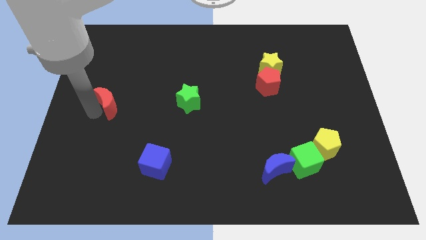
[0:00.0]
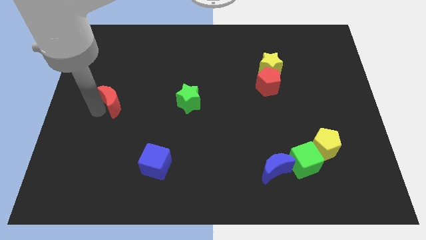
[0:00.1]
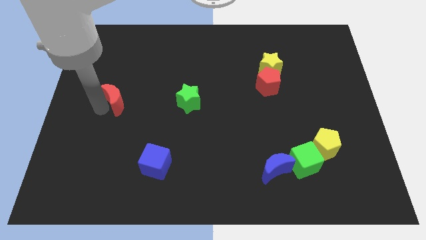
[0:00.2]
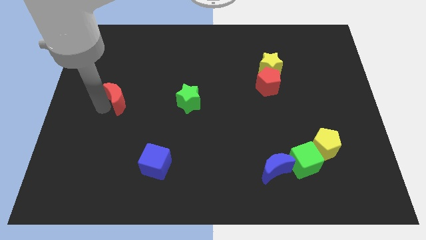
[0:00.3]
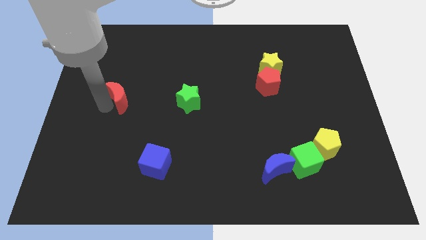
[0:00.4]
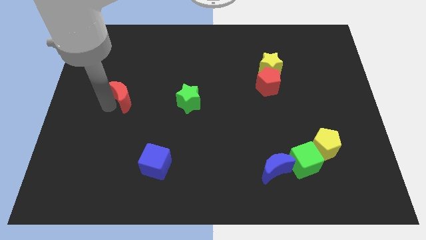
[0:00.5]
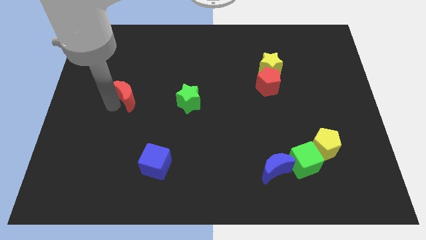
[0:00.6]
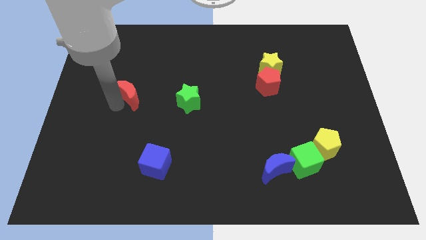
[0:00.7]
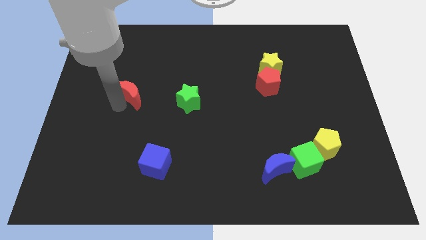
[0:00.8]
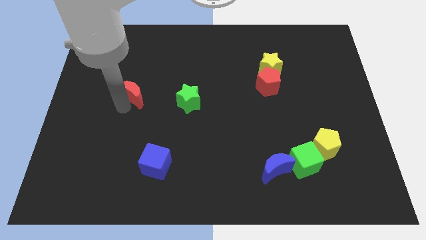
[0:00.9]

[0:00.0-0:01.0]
move the red crescent to the right of the board

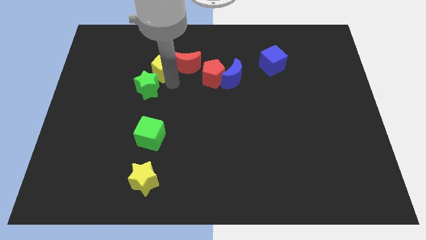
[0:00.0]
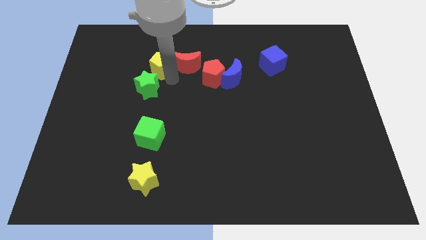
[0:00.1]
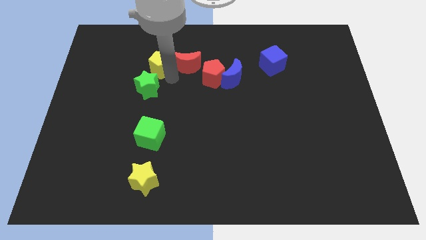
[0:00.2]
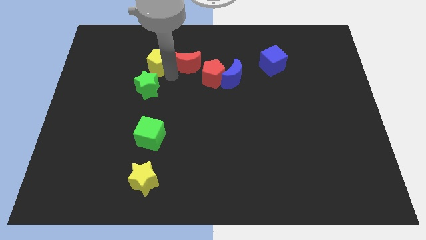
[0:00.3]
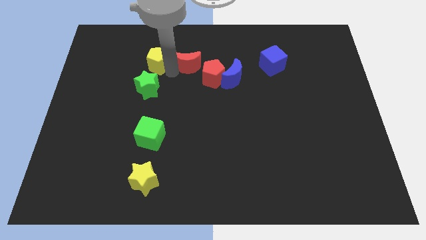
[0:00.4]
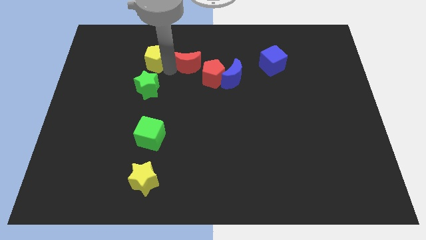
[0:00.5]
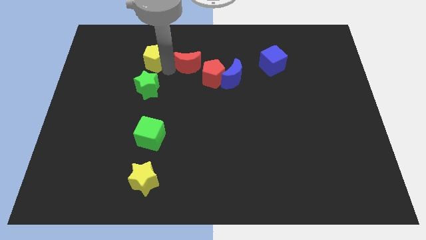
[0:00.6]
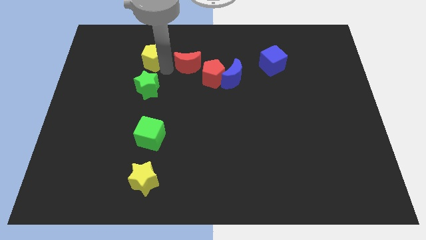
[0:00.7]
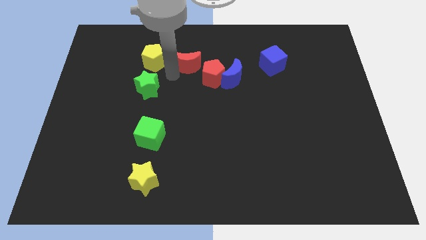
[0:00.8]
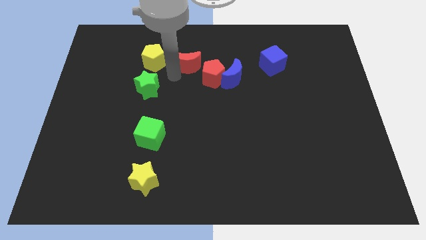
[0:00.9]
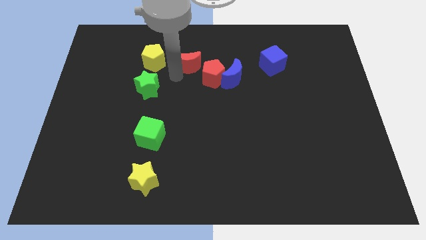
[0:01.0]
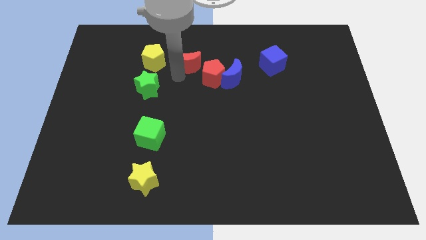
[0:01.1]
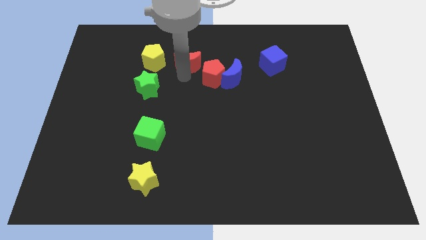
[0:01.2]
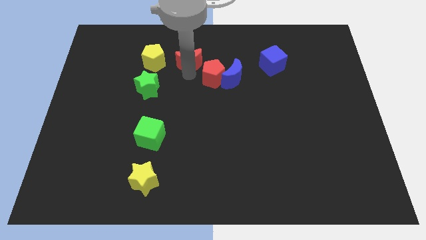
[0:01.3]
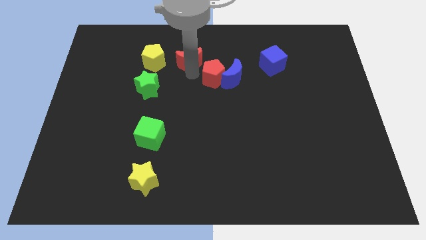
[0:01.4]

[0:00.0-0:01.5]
push the yellow pentagon slightly up

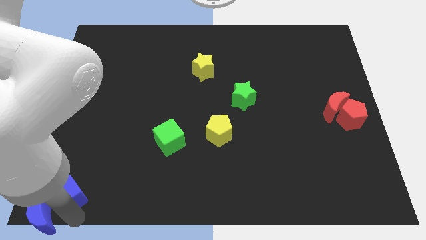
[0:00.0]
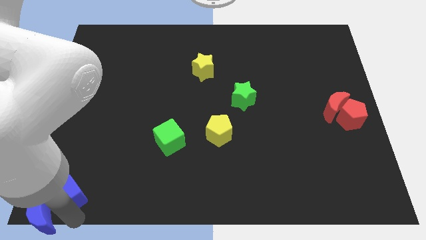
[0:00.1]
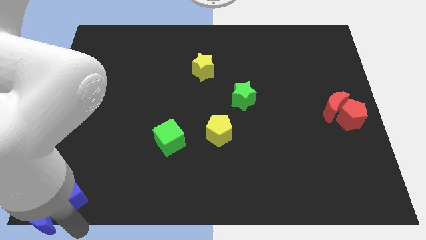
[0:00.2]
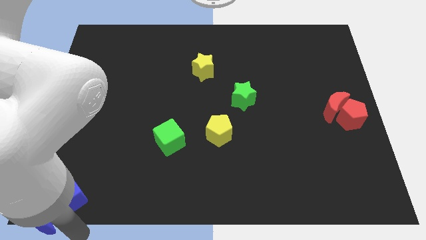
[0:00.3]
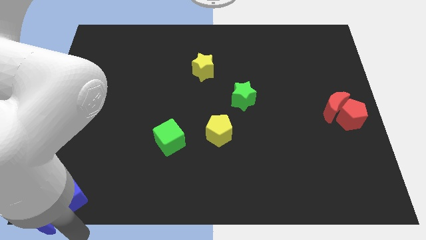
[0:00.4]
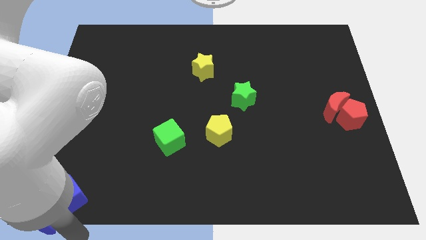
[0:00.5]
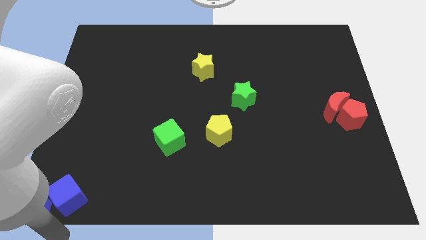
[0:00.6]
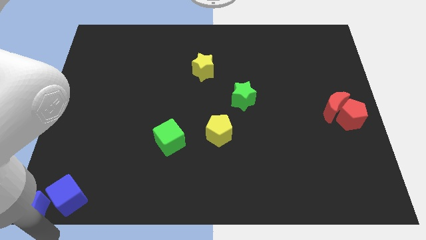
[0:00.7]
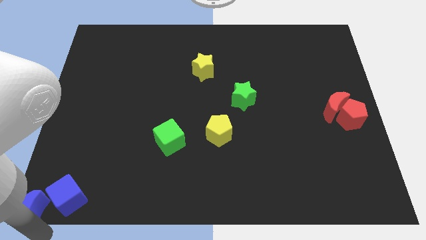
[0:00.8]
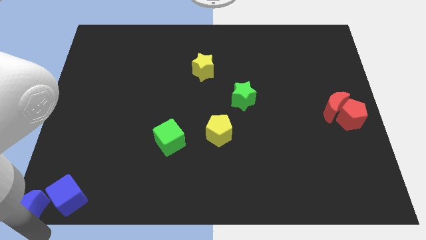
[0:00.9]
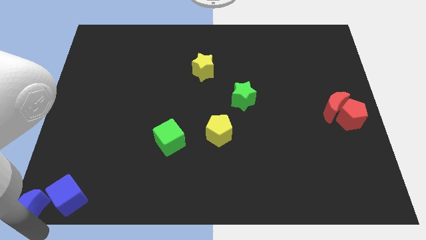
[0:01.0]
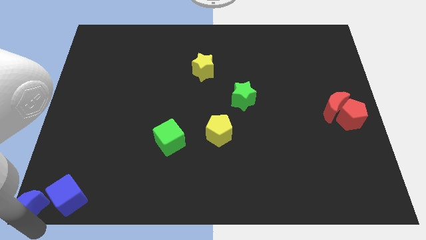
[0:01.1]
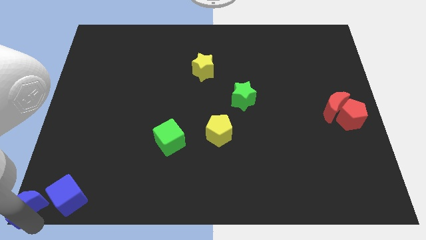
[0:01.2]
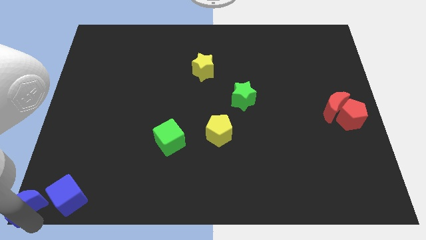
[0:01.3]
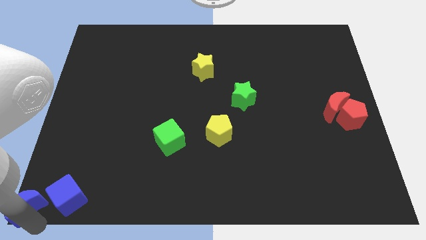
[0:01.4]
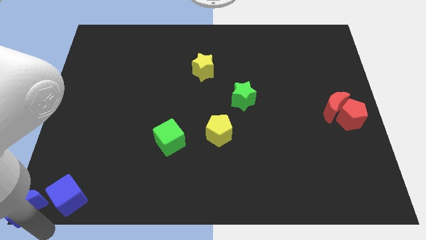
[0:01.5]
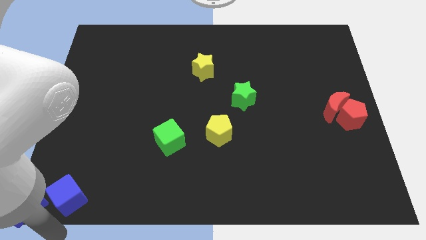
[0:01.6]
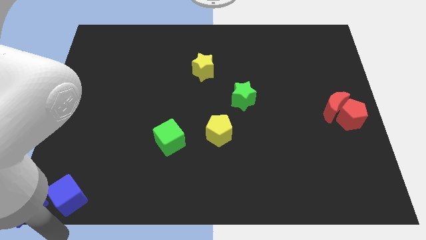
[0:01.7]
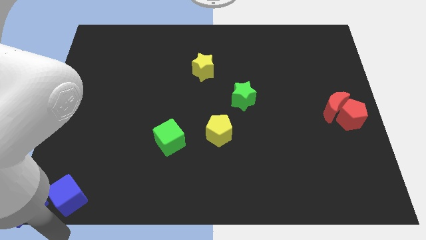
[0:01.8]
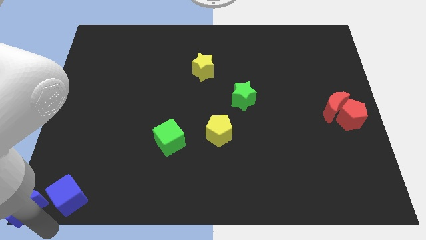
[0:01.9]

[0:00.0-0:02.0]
move the blue moon to the bottom left corner

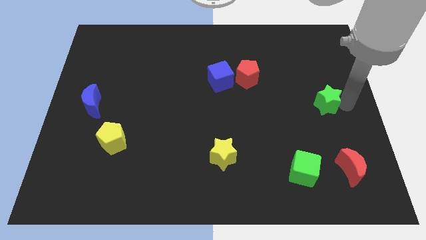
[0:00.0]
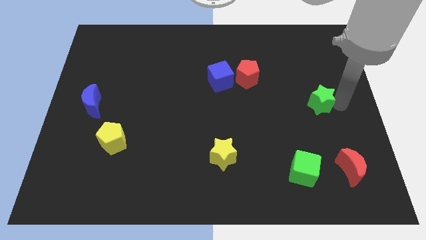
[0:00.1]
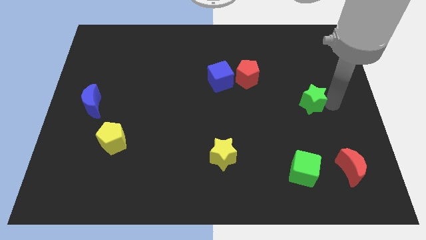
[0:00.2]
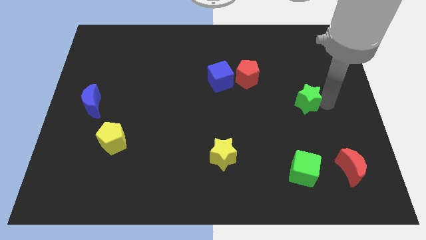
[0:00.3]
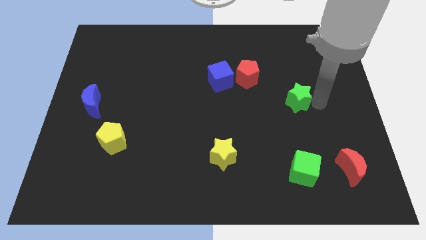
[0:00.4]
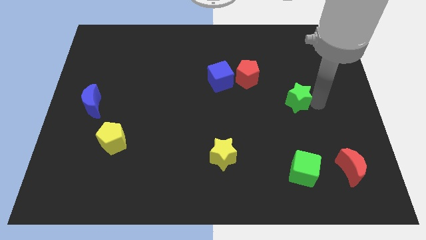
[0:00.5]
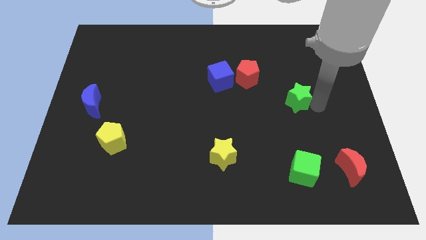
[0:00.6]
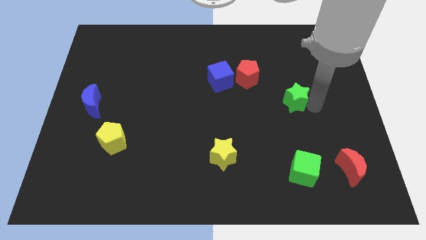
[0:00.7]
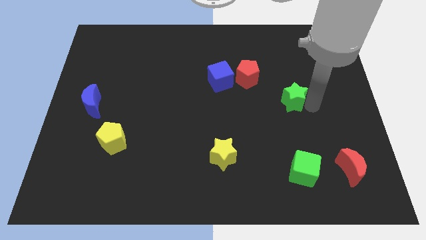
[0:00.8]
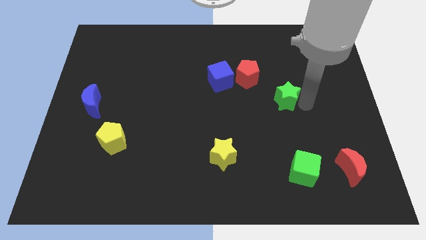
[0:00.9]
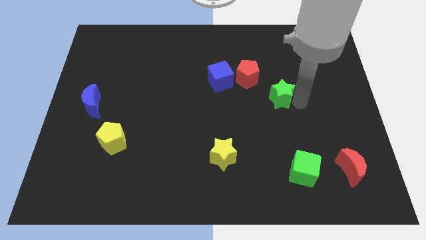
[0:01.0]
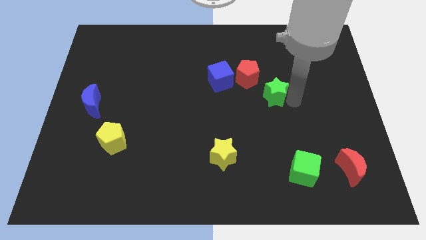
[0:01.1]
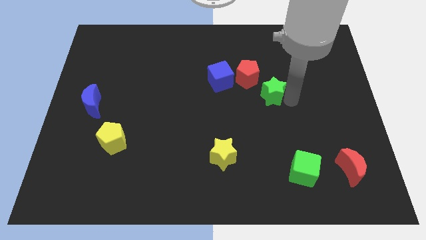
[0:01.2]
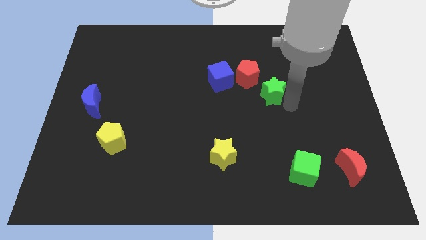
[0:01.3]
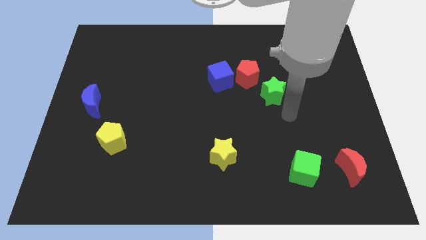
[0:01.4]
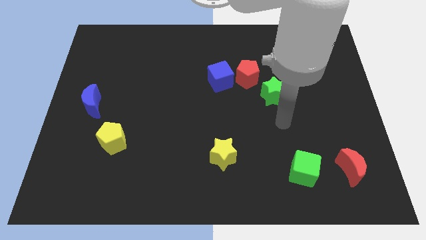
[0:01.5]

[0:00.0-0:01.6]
move the green star towards the red pentagon

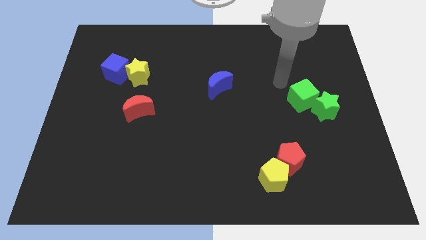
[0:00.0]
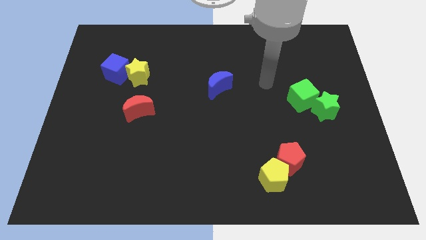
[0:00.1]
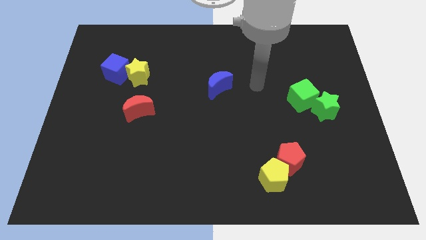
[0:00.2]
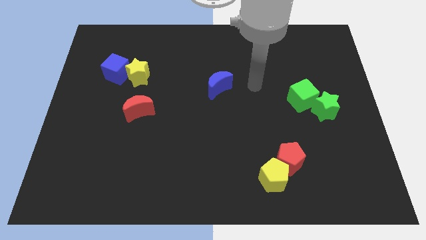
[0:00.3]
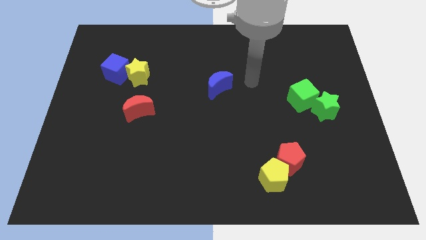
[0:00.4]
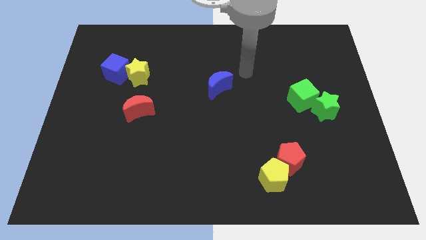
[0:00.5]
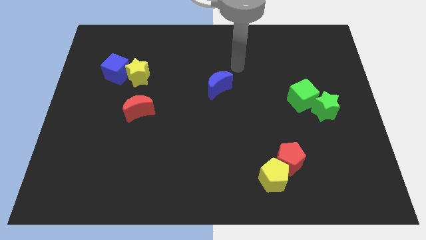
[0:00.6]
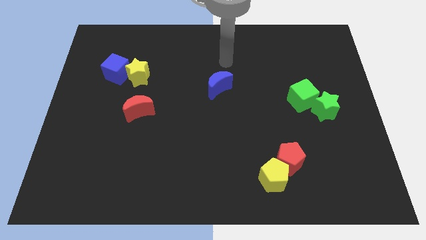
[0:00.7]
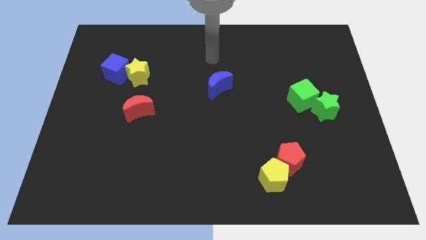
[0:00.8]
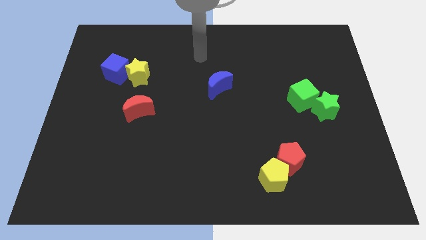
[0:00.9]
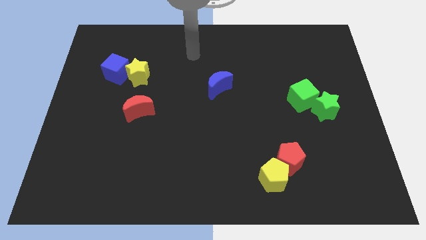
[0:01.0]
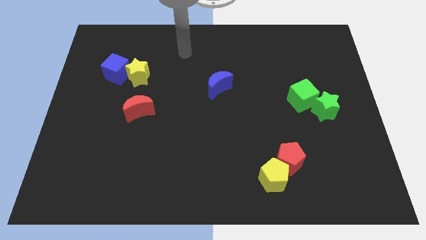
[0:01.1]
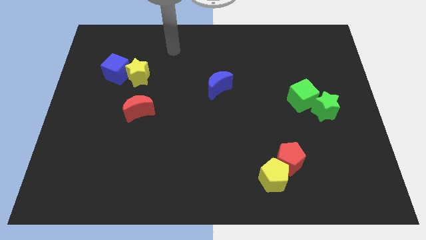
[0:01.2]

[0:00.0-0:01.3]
move the hand away from the green cube

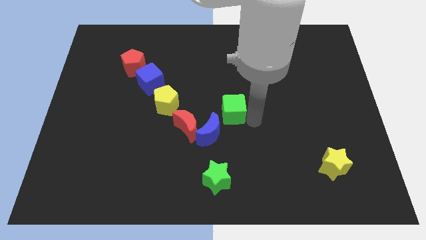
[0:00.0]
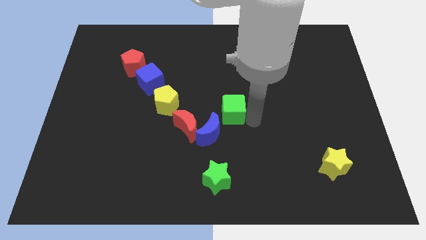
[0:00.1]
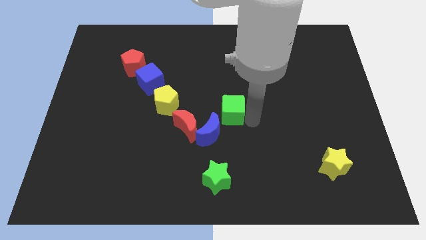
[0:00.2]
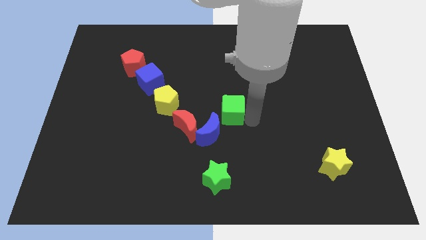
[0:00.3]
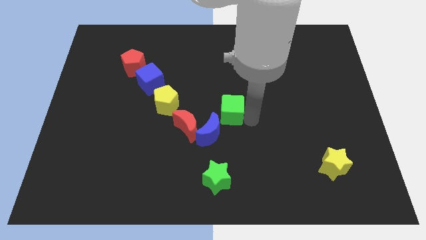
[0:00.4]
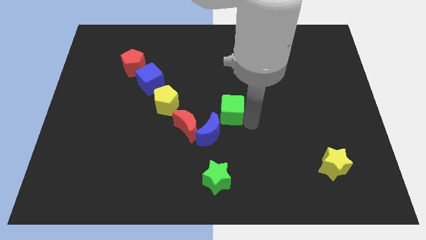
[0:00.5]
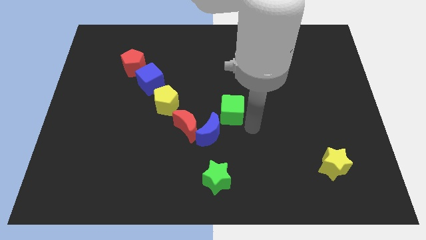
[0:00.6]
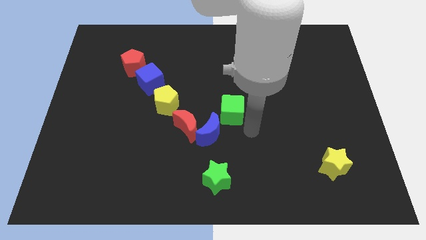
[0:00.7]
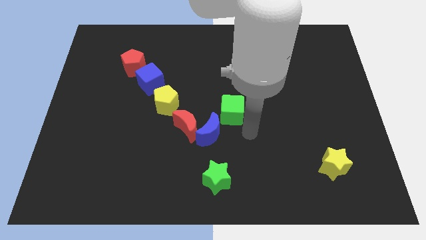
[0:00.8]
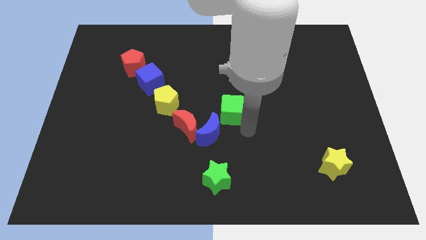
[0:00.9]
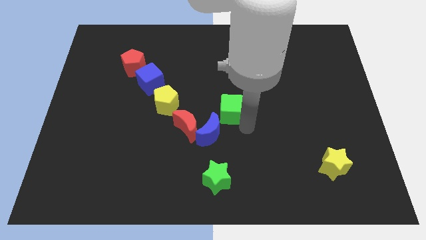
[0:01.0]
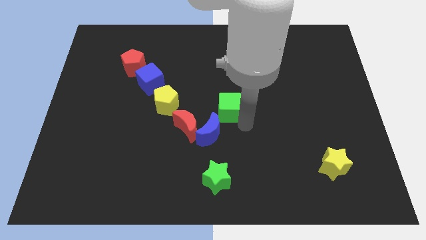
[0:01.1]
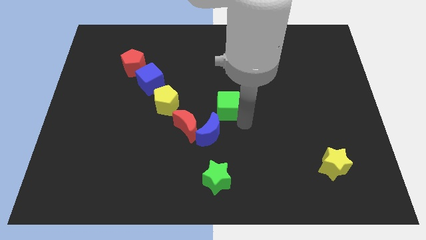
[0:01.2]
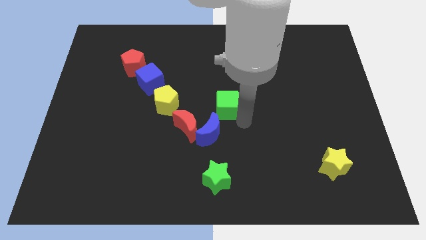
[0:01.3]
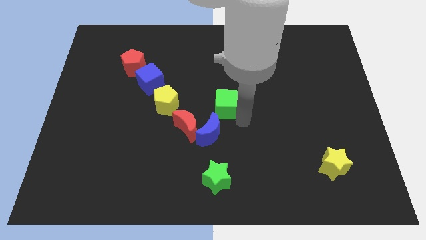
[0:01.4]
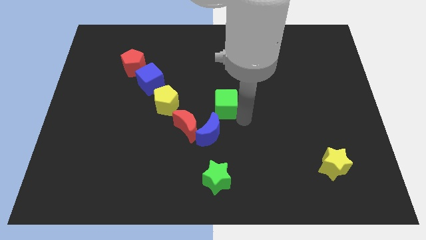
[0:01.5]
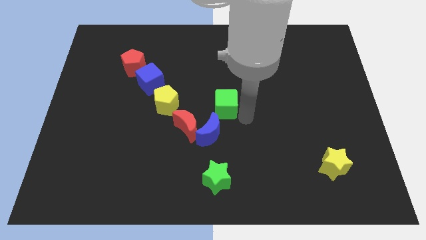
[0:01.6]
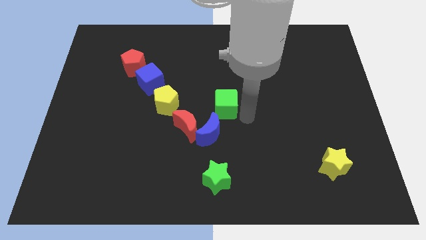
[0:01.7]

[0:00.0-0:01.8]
place the green cube to the right of the red moon
